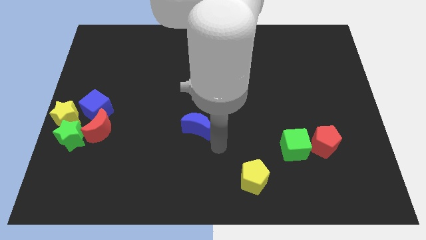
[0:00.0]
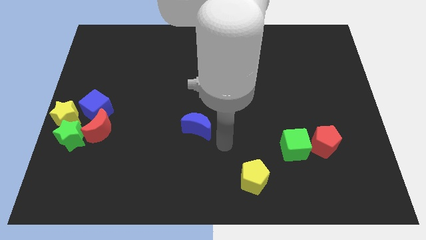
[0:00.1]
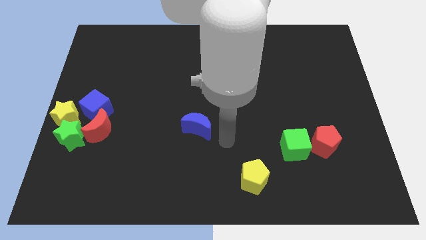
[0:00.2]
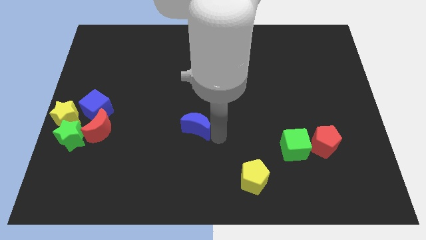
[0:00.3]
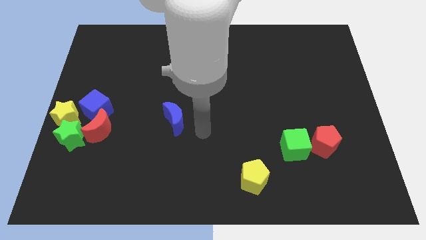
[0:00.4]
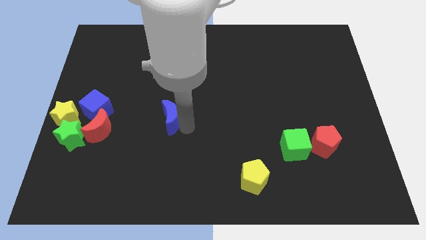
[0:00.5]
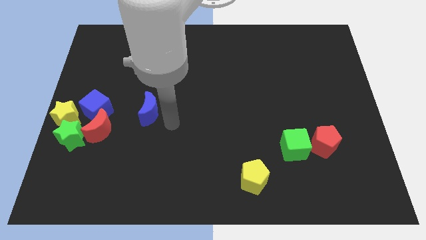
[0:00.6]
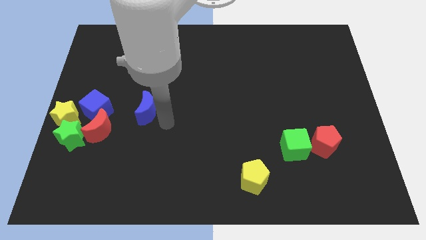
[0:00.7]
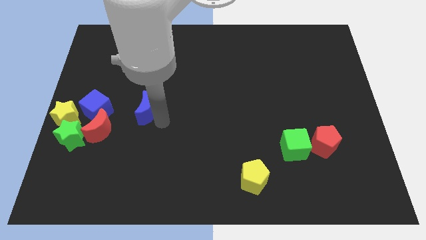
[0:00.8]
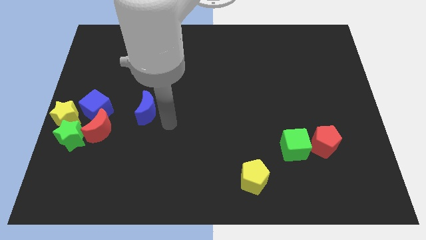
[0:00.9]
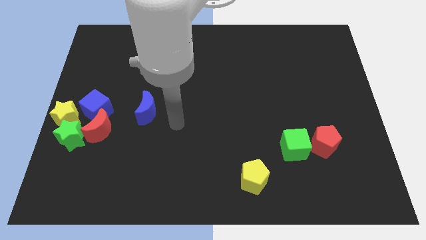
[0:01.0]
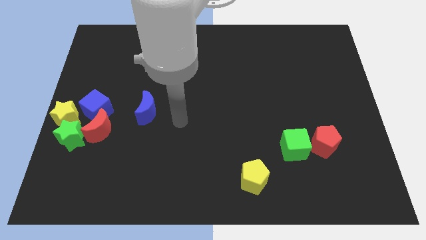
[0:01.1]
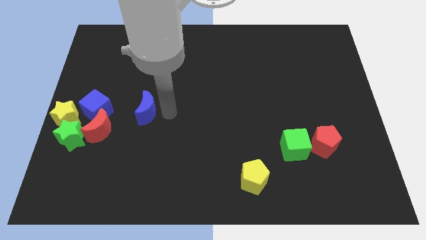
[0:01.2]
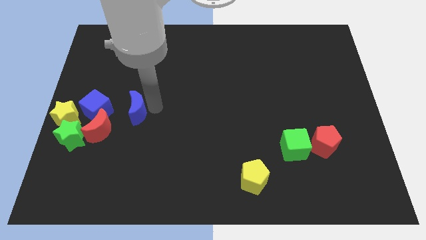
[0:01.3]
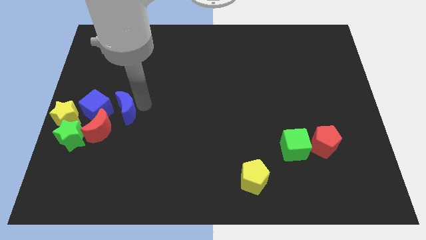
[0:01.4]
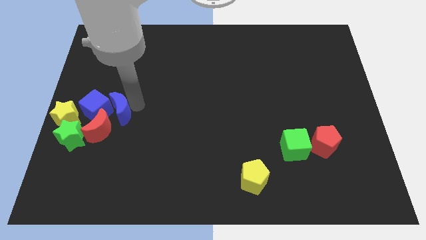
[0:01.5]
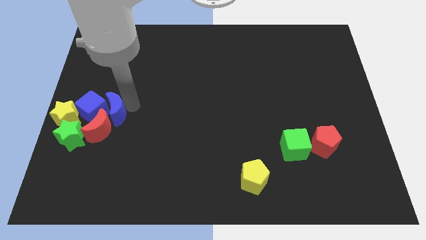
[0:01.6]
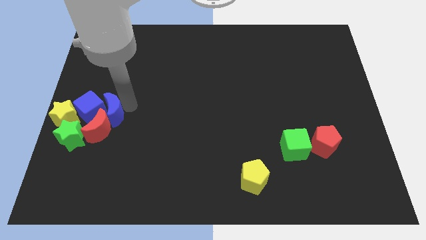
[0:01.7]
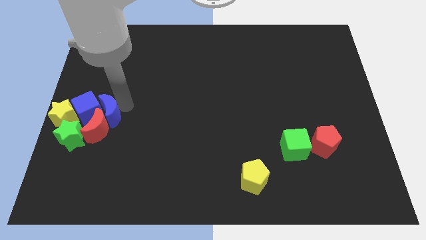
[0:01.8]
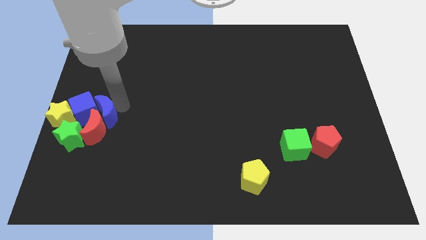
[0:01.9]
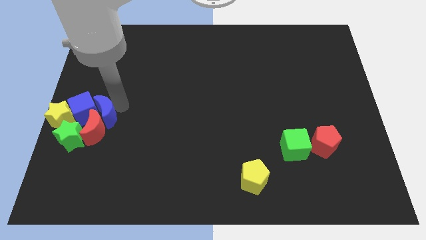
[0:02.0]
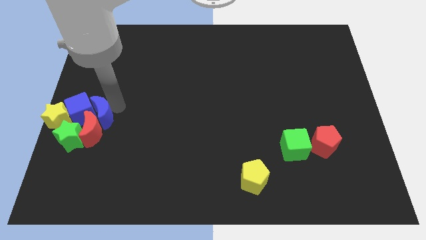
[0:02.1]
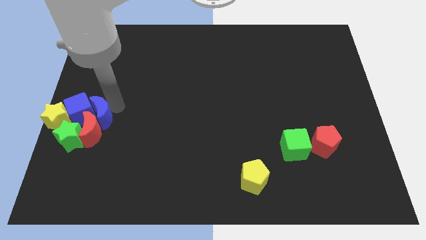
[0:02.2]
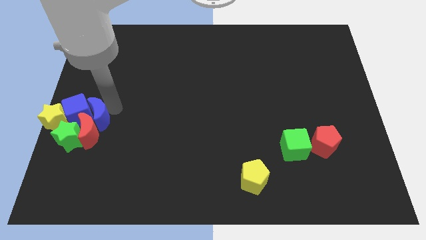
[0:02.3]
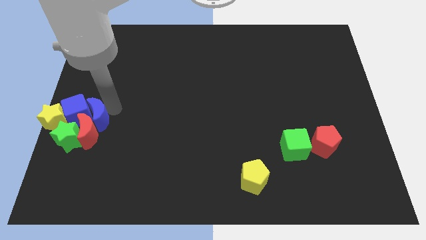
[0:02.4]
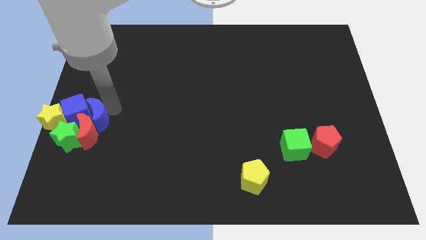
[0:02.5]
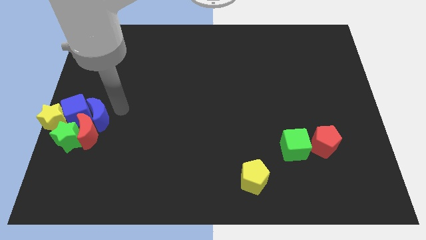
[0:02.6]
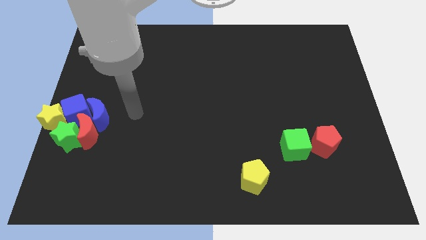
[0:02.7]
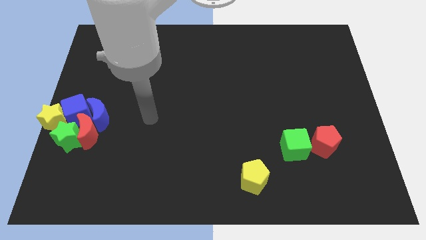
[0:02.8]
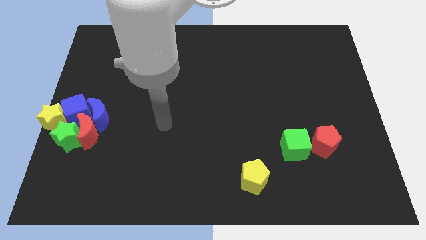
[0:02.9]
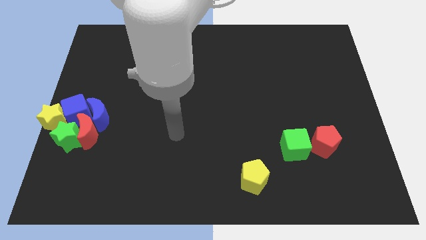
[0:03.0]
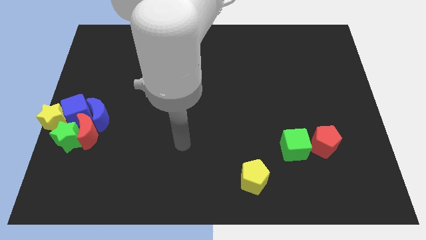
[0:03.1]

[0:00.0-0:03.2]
push the blue crescent into the blue cube

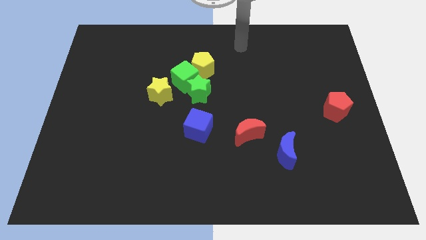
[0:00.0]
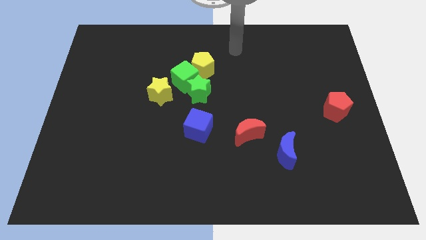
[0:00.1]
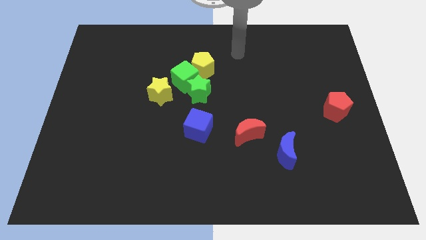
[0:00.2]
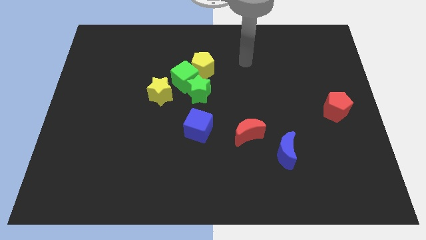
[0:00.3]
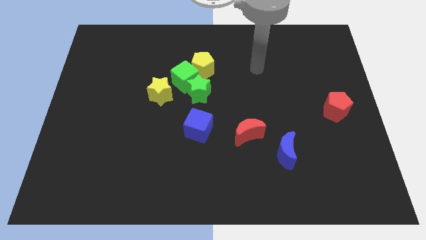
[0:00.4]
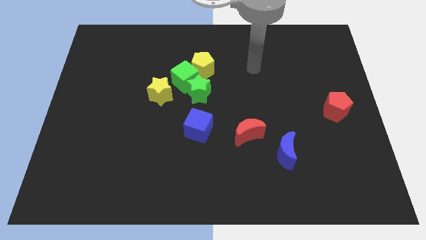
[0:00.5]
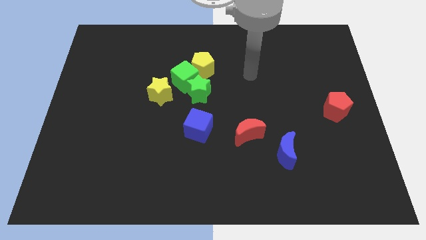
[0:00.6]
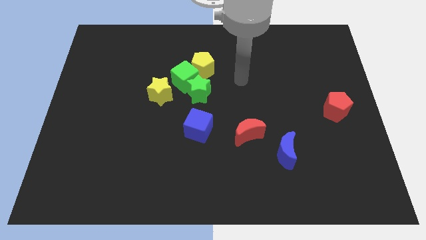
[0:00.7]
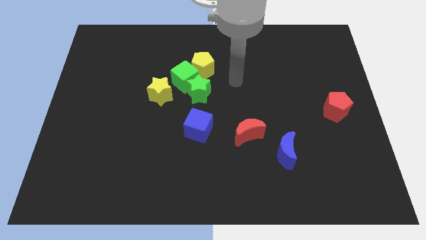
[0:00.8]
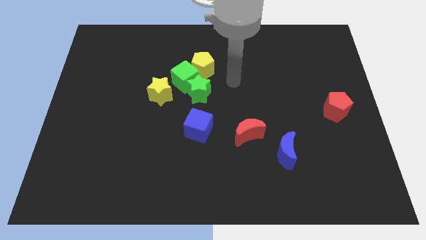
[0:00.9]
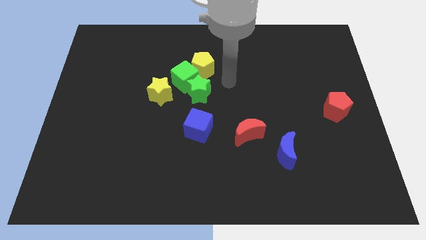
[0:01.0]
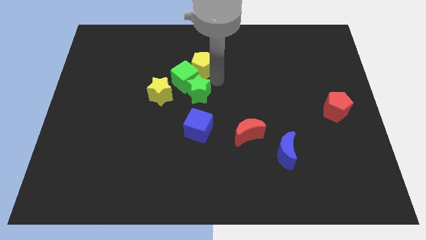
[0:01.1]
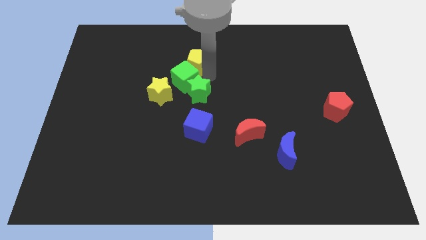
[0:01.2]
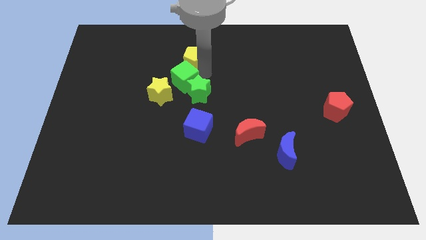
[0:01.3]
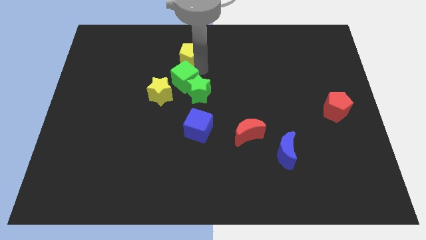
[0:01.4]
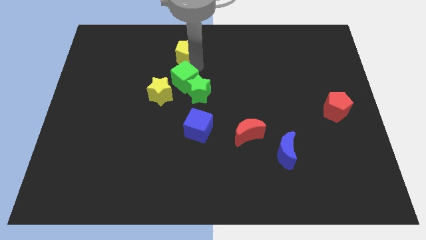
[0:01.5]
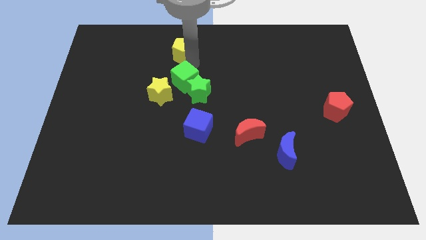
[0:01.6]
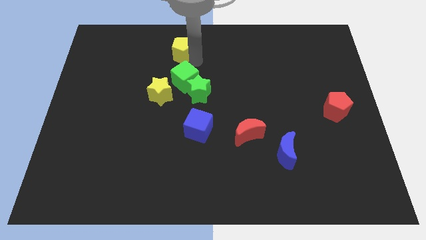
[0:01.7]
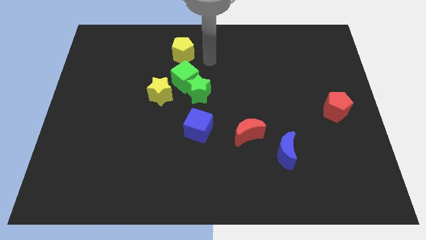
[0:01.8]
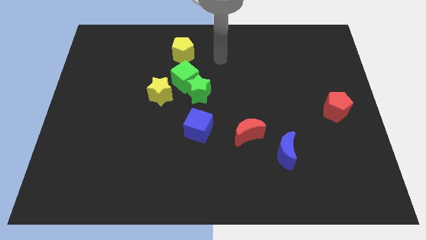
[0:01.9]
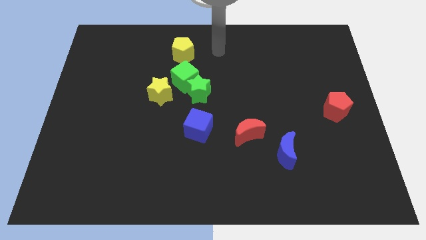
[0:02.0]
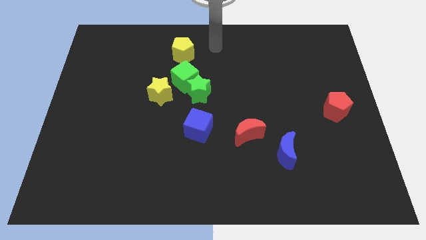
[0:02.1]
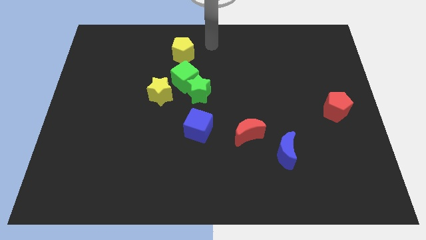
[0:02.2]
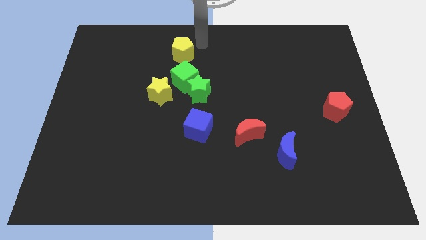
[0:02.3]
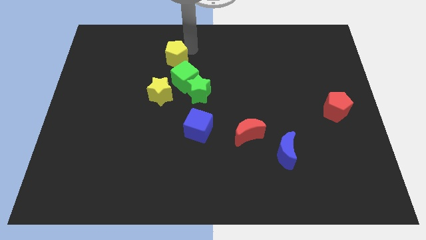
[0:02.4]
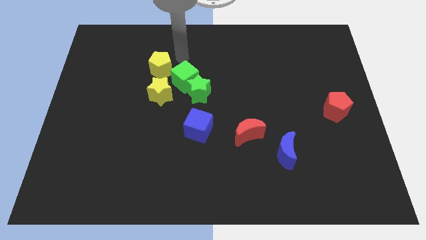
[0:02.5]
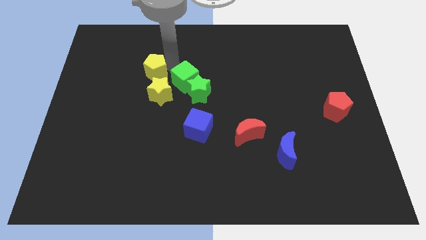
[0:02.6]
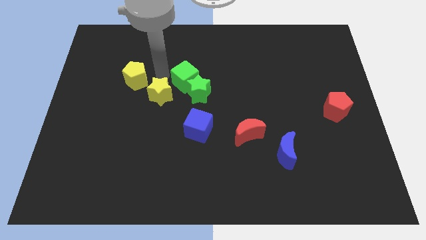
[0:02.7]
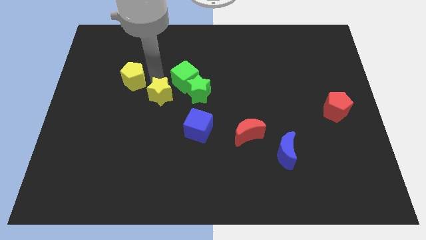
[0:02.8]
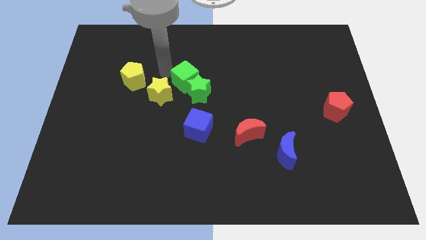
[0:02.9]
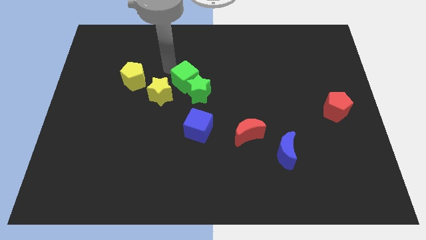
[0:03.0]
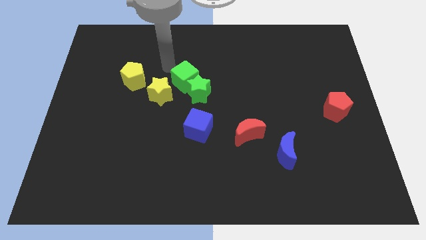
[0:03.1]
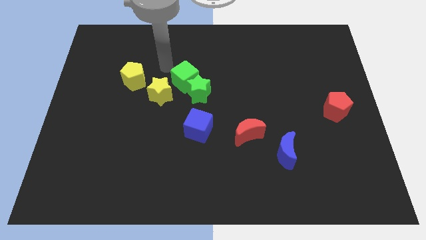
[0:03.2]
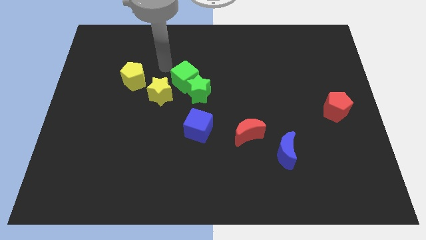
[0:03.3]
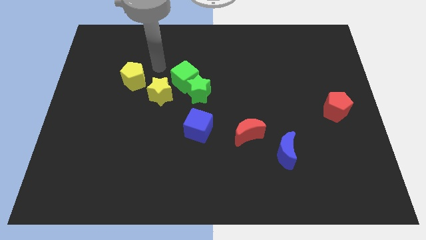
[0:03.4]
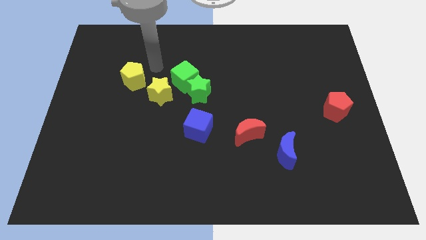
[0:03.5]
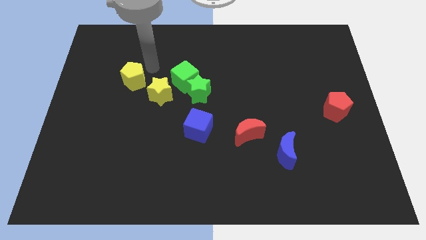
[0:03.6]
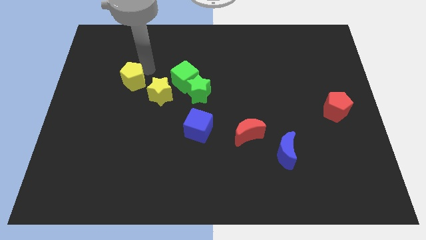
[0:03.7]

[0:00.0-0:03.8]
slide the yellow pentagon diagonally top left to the yellow star

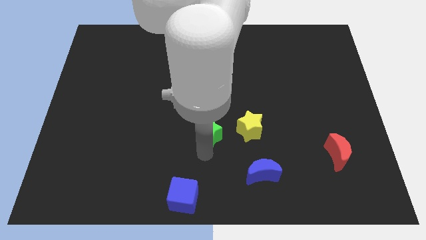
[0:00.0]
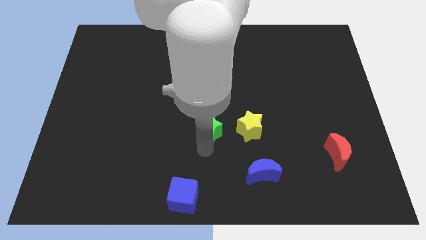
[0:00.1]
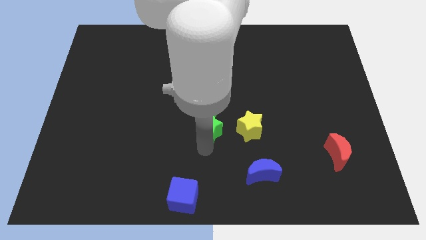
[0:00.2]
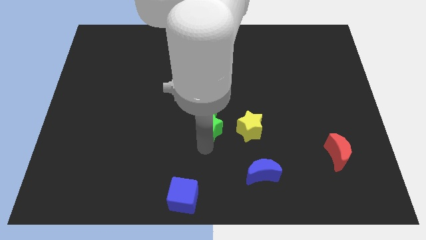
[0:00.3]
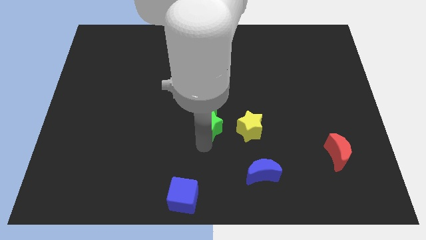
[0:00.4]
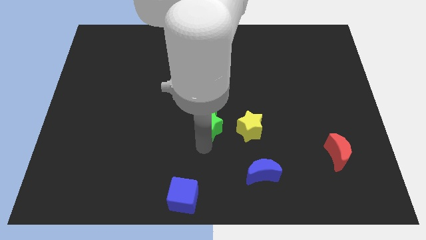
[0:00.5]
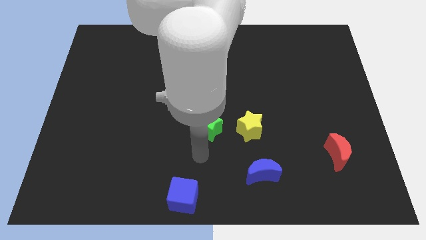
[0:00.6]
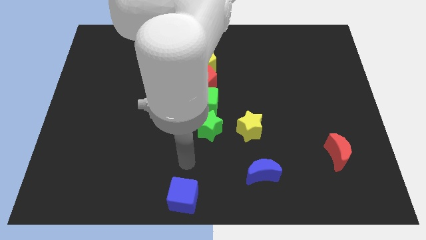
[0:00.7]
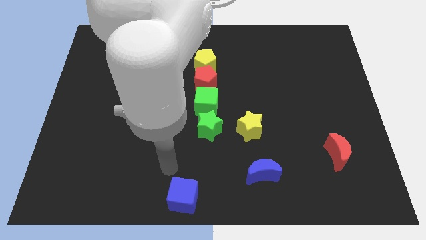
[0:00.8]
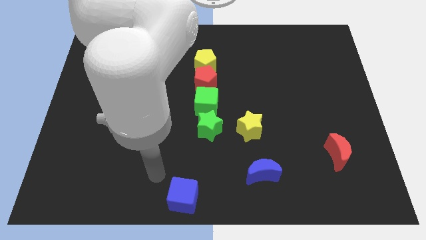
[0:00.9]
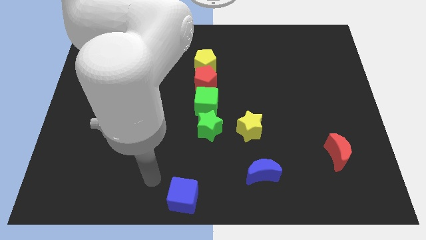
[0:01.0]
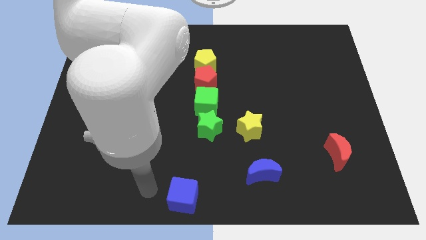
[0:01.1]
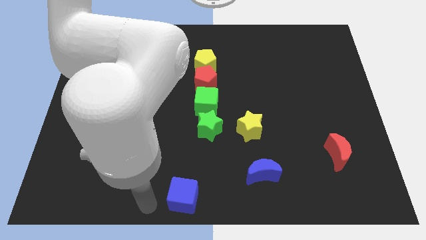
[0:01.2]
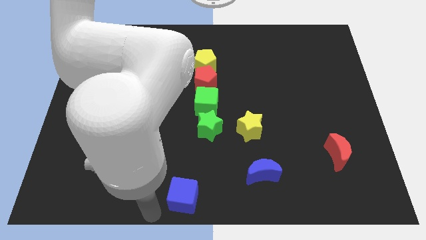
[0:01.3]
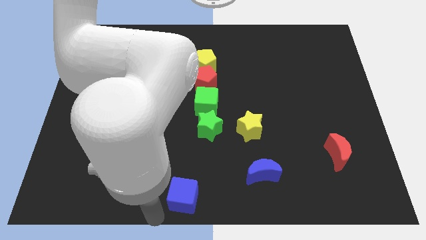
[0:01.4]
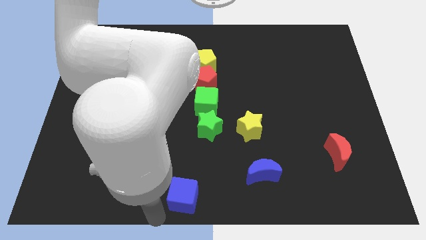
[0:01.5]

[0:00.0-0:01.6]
push green star into the green cube

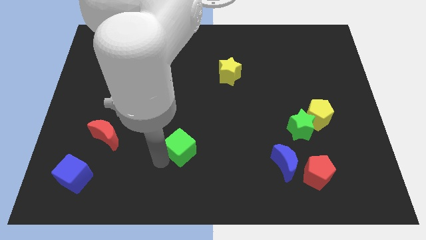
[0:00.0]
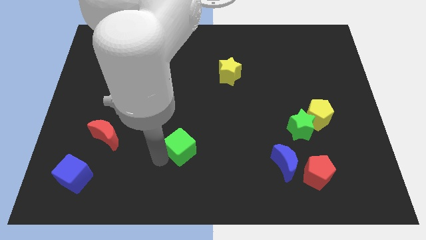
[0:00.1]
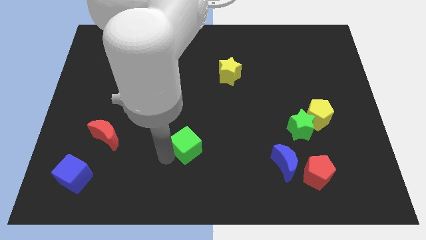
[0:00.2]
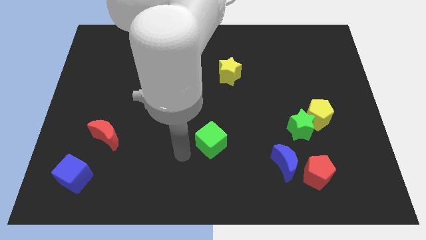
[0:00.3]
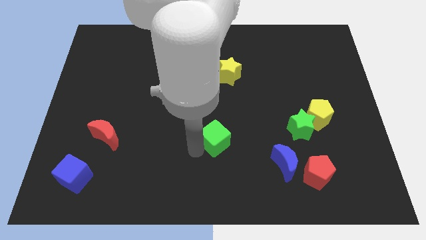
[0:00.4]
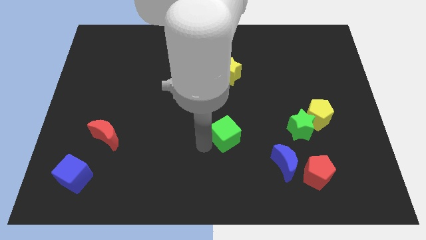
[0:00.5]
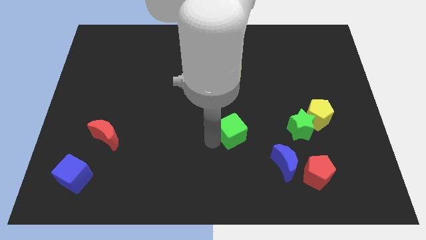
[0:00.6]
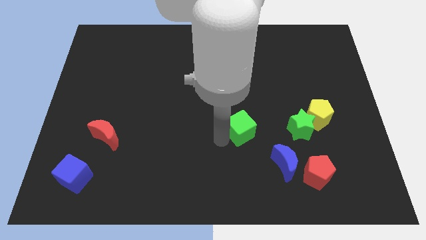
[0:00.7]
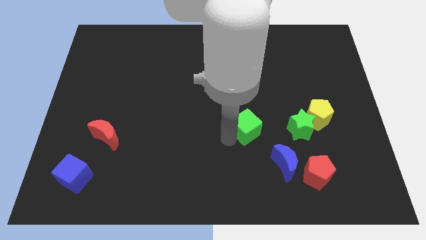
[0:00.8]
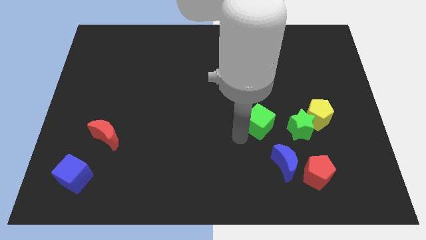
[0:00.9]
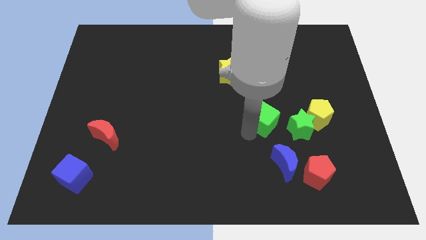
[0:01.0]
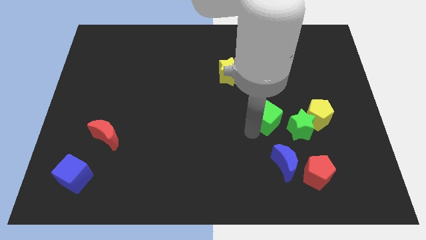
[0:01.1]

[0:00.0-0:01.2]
move the green cube towards the green star
